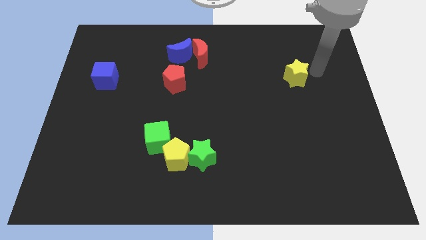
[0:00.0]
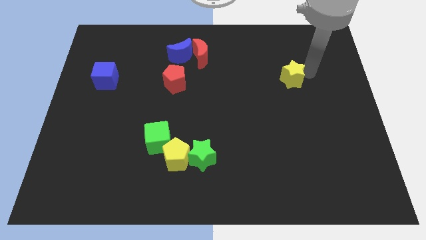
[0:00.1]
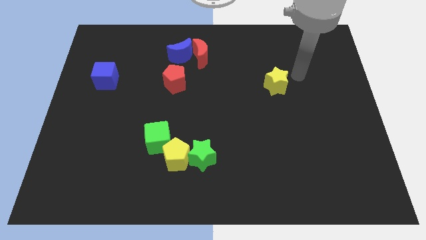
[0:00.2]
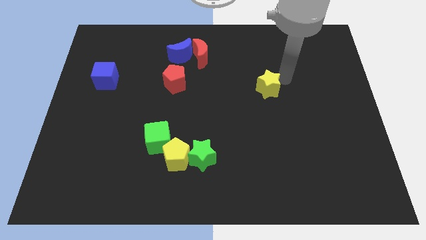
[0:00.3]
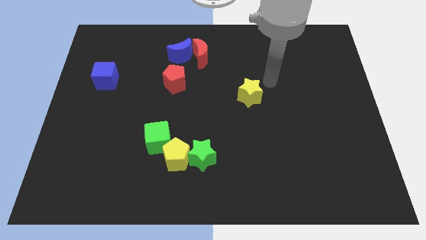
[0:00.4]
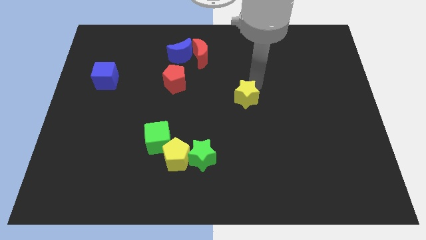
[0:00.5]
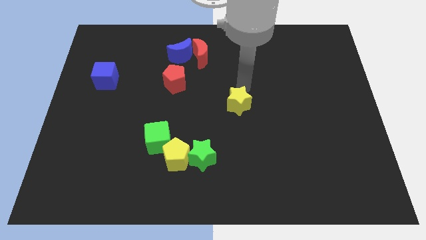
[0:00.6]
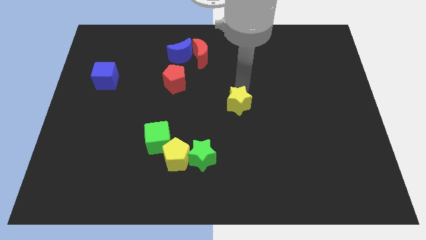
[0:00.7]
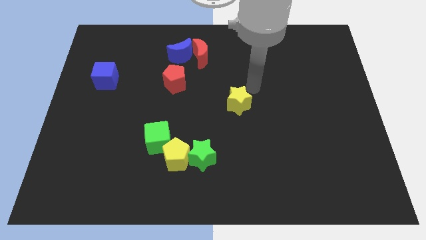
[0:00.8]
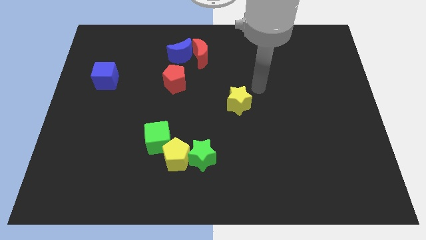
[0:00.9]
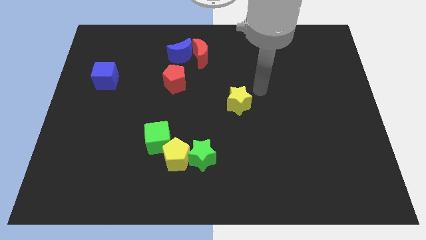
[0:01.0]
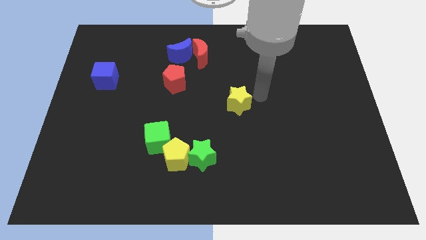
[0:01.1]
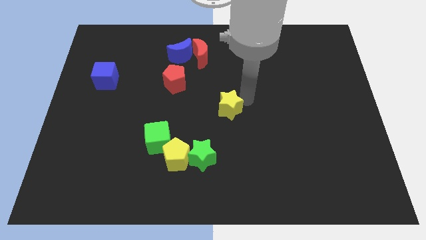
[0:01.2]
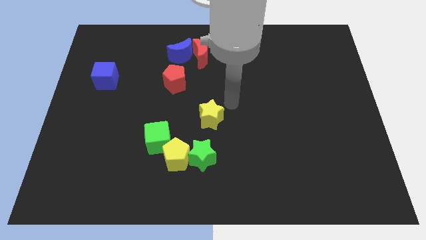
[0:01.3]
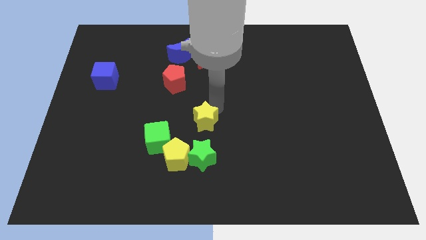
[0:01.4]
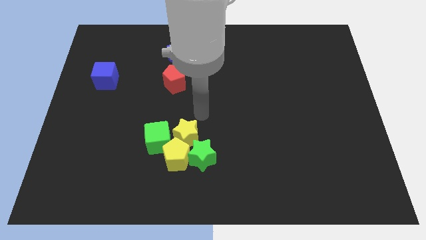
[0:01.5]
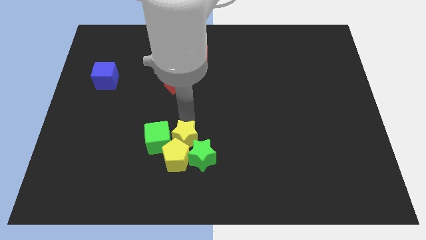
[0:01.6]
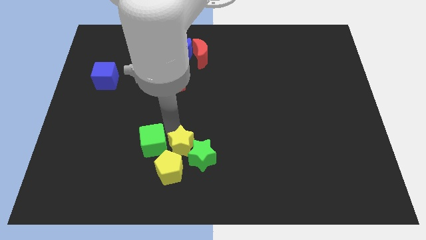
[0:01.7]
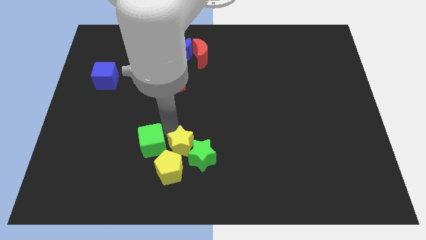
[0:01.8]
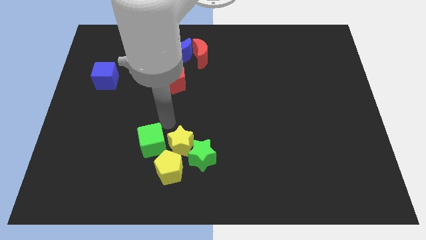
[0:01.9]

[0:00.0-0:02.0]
place a yellow star close to the green star

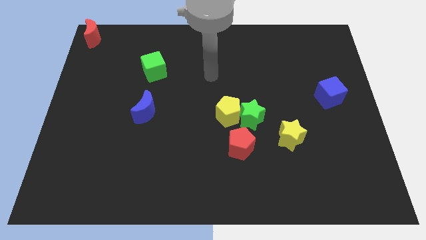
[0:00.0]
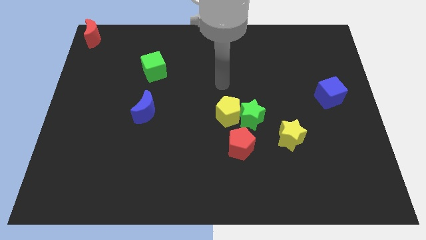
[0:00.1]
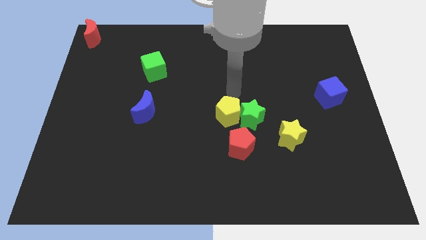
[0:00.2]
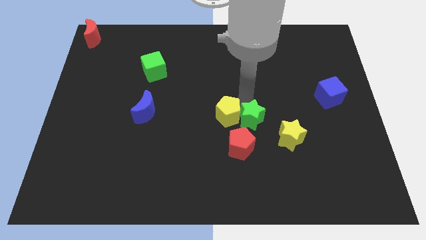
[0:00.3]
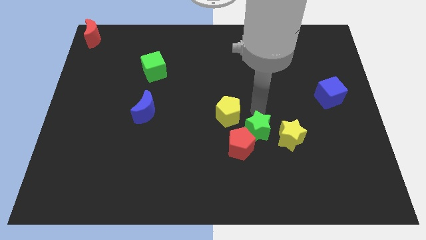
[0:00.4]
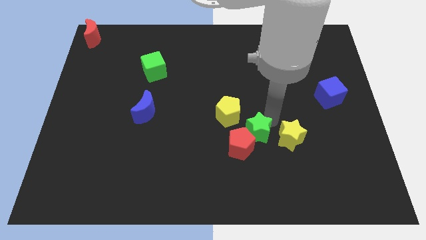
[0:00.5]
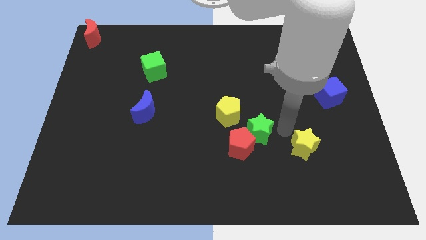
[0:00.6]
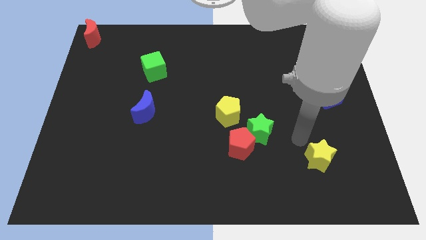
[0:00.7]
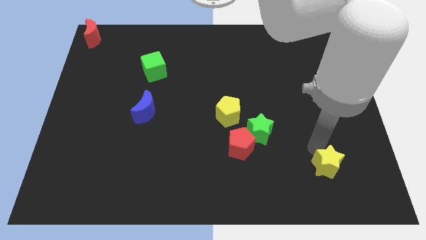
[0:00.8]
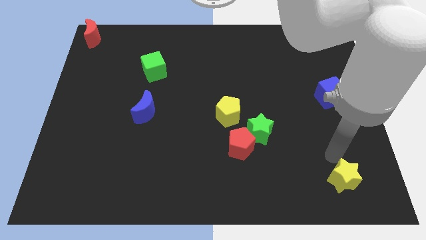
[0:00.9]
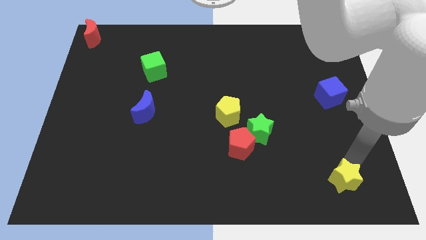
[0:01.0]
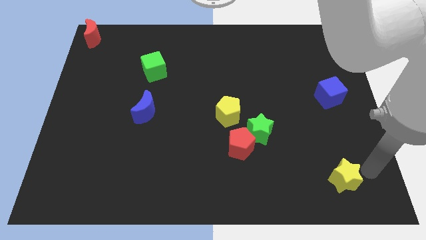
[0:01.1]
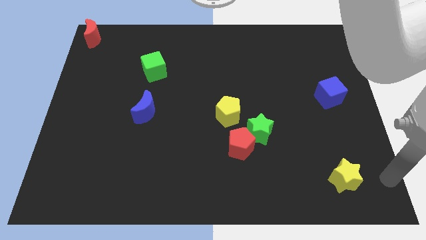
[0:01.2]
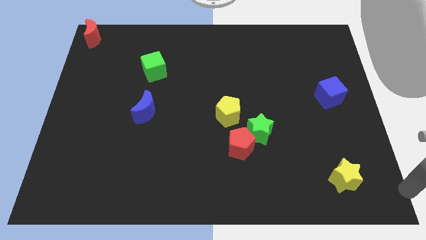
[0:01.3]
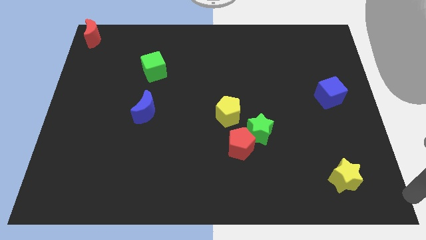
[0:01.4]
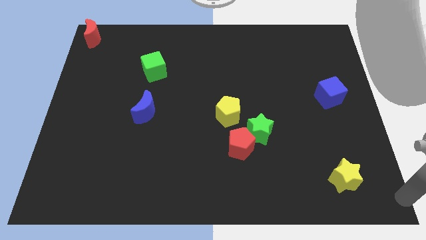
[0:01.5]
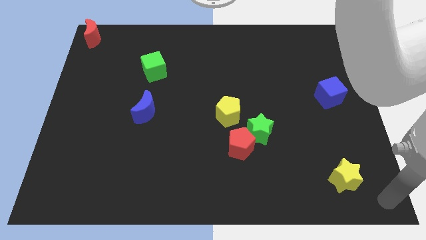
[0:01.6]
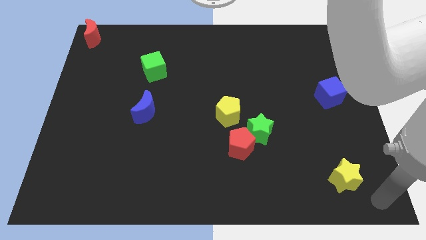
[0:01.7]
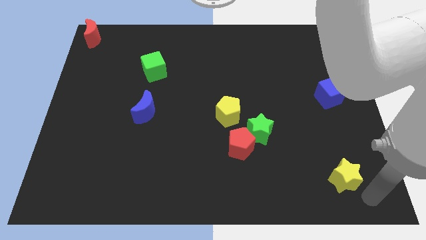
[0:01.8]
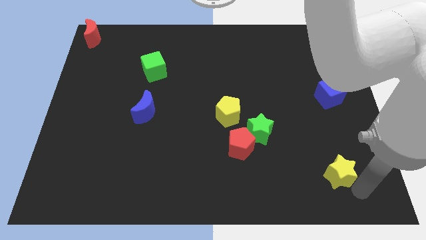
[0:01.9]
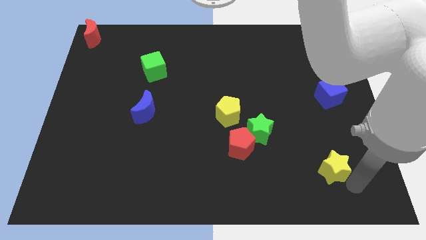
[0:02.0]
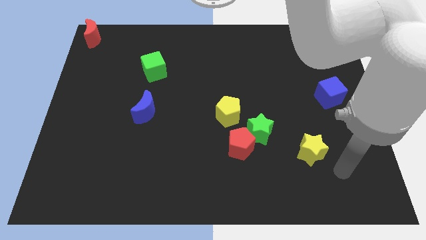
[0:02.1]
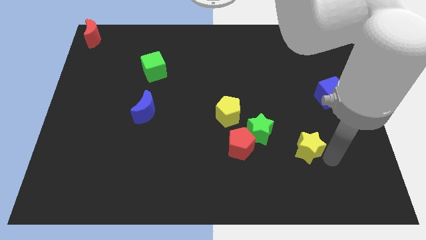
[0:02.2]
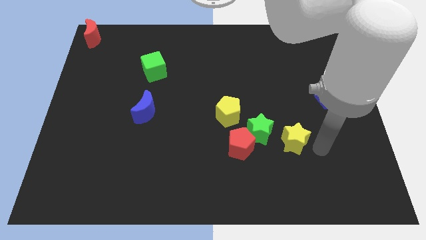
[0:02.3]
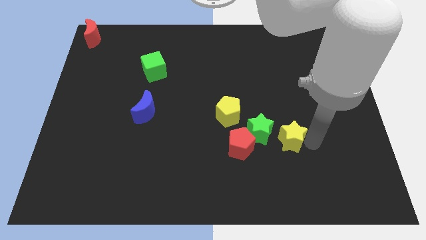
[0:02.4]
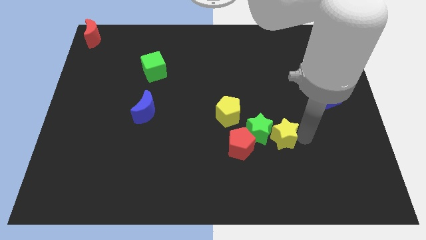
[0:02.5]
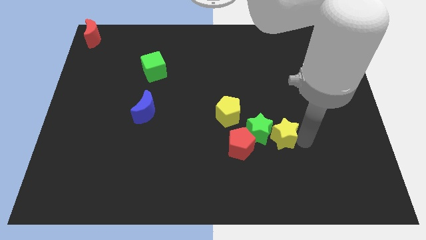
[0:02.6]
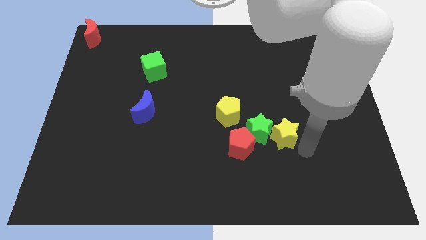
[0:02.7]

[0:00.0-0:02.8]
place yellow star to the right of green star

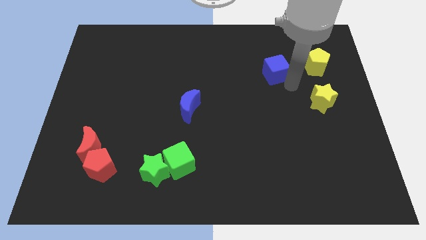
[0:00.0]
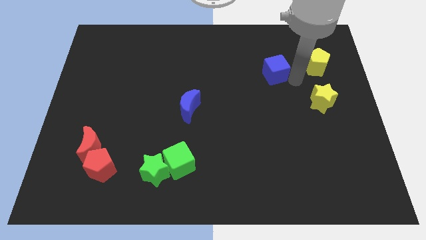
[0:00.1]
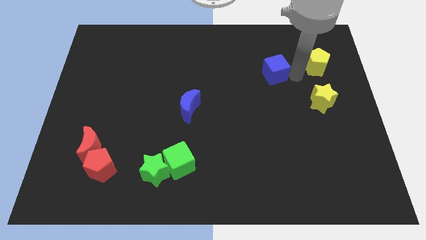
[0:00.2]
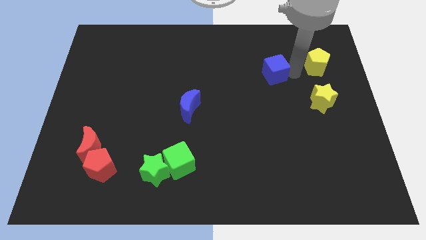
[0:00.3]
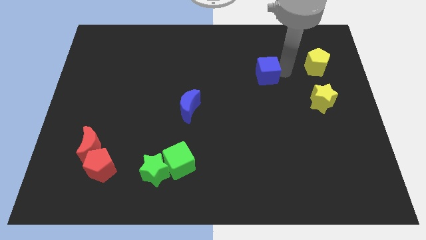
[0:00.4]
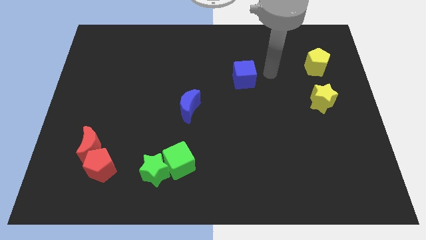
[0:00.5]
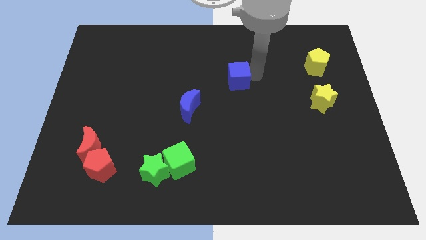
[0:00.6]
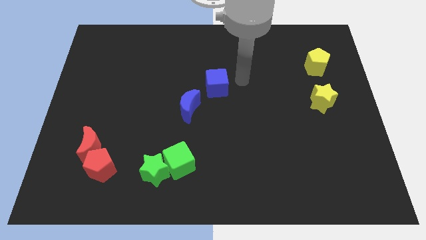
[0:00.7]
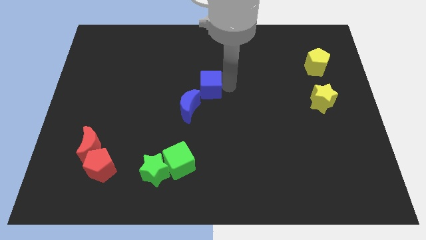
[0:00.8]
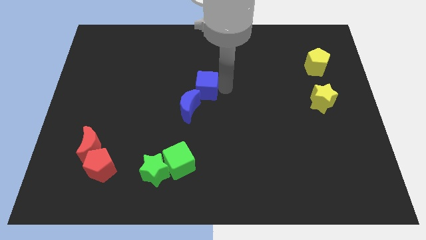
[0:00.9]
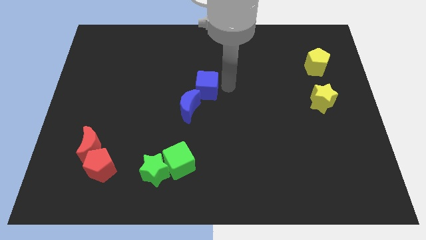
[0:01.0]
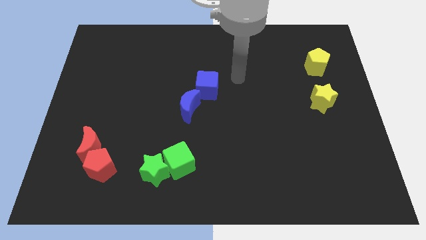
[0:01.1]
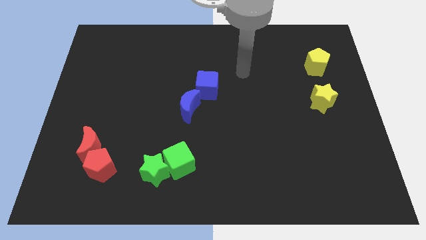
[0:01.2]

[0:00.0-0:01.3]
place the blue cube above the blue crescent

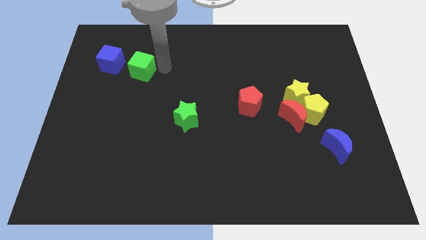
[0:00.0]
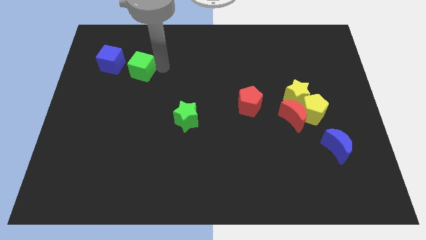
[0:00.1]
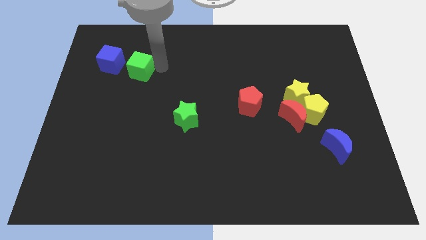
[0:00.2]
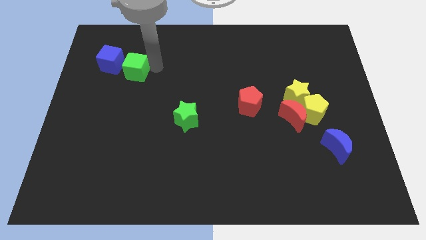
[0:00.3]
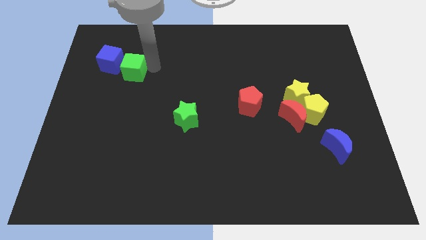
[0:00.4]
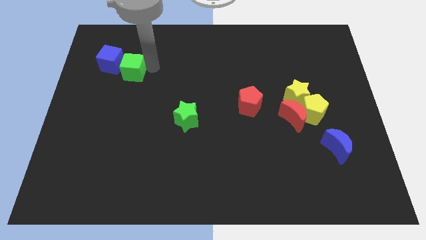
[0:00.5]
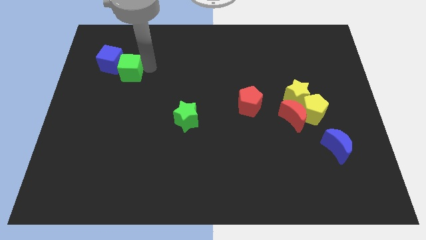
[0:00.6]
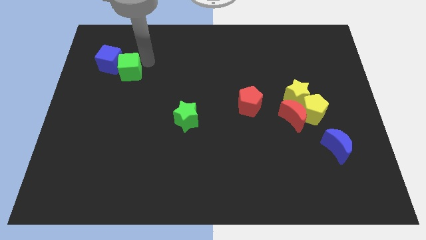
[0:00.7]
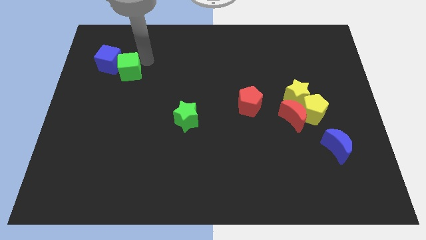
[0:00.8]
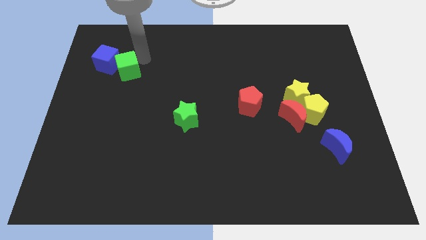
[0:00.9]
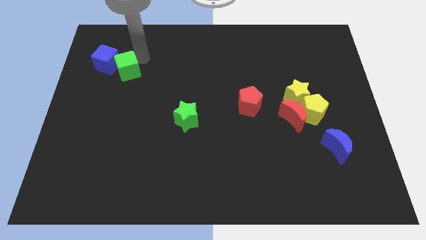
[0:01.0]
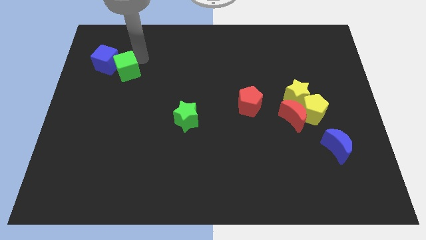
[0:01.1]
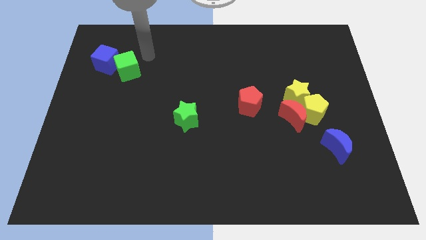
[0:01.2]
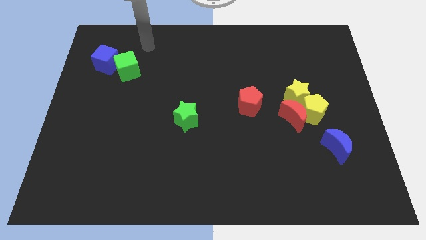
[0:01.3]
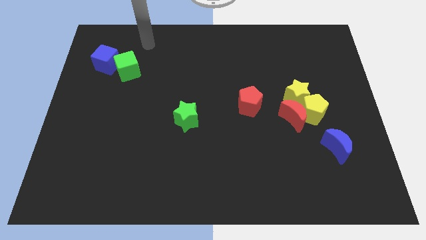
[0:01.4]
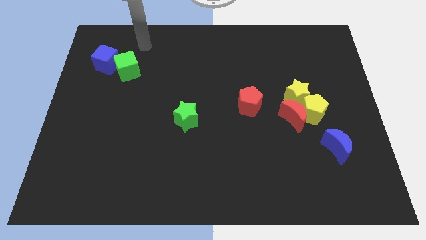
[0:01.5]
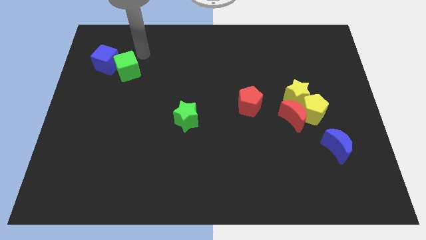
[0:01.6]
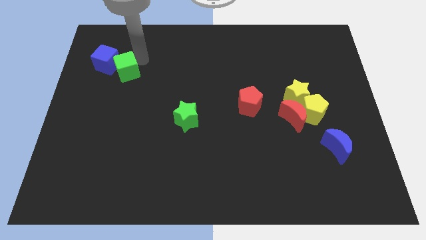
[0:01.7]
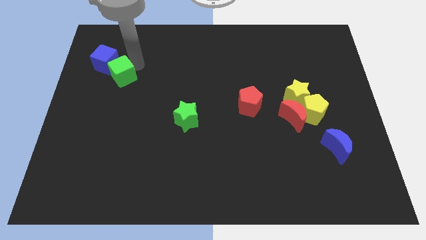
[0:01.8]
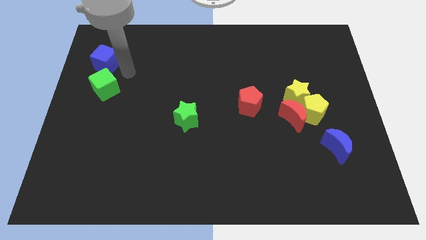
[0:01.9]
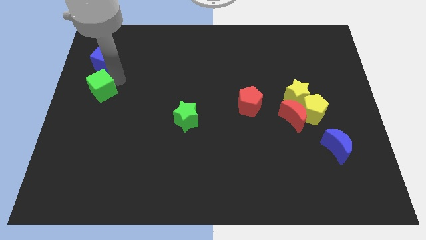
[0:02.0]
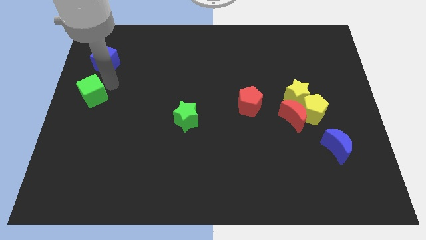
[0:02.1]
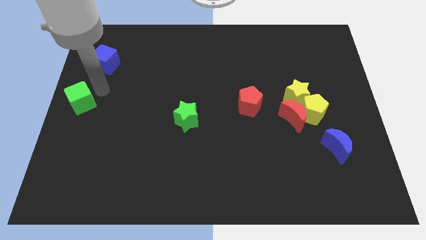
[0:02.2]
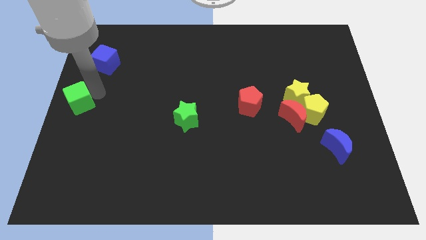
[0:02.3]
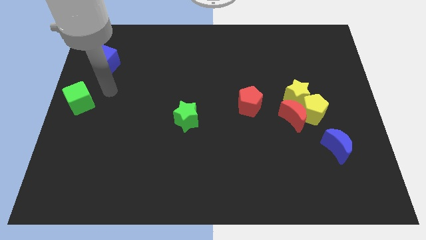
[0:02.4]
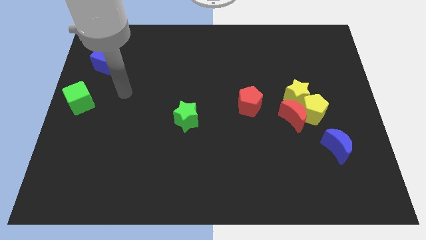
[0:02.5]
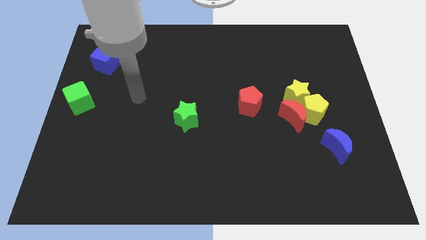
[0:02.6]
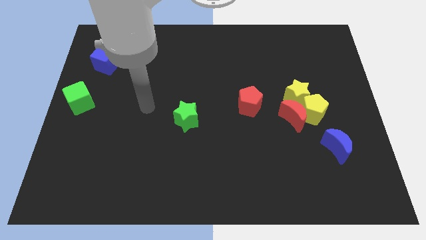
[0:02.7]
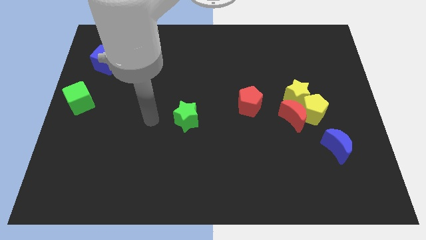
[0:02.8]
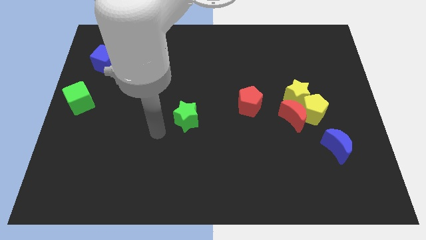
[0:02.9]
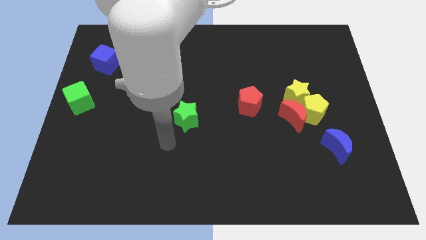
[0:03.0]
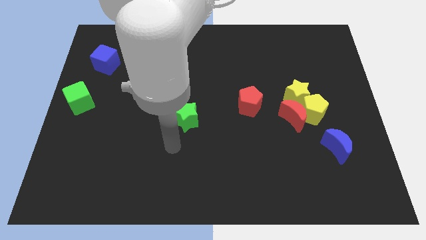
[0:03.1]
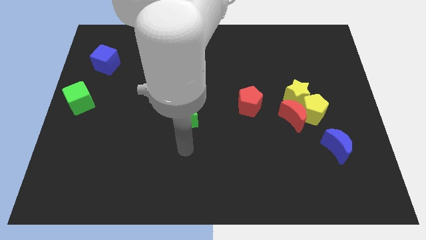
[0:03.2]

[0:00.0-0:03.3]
place the green cube at the left center of the board
